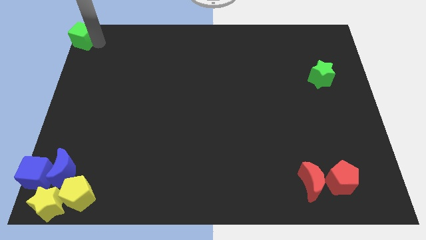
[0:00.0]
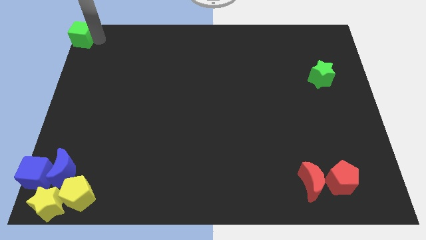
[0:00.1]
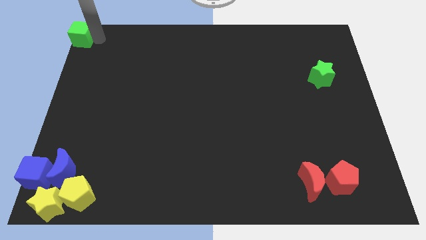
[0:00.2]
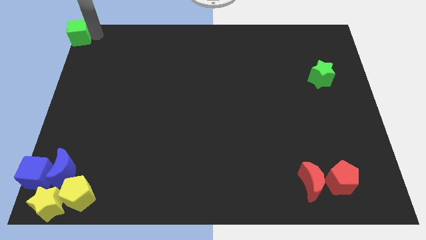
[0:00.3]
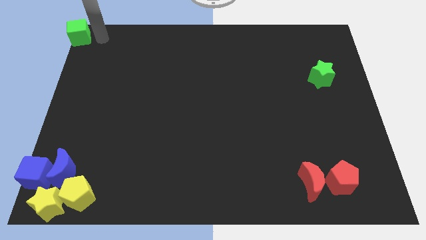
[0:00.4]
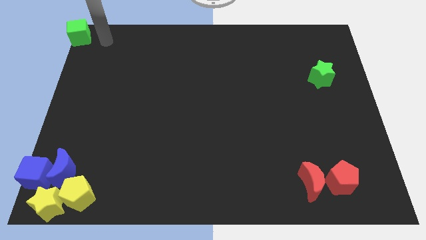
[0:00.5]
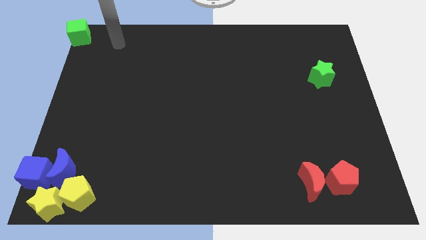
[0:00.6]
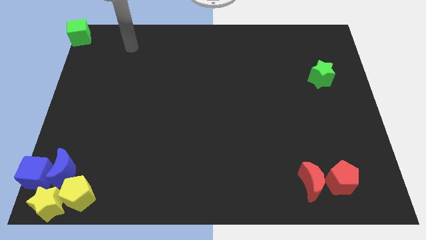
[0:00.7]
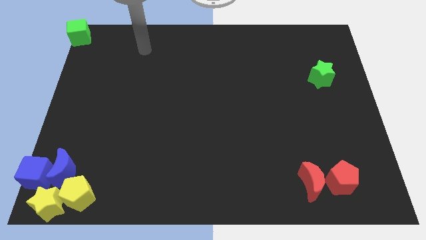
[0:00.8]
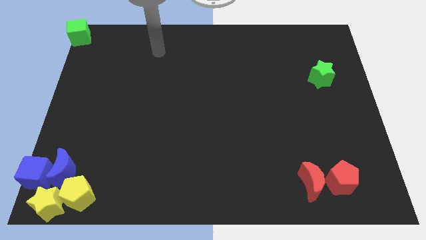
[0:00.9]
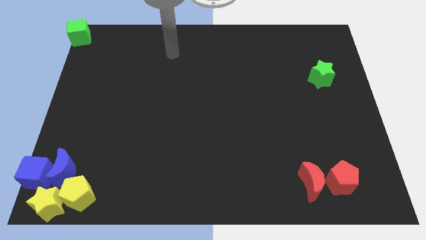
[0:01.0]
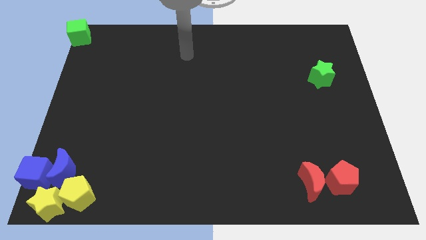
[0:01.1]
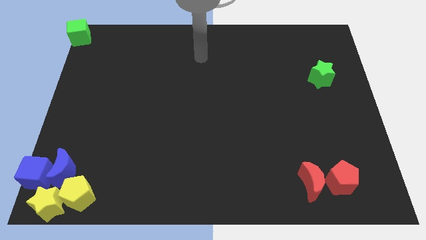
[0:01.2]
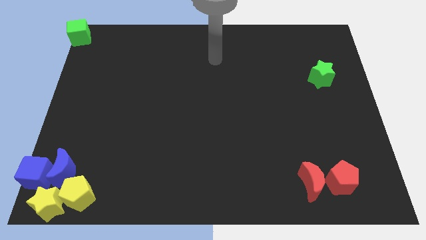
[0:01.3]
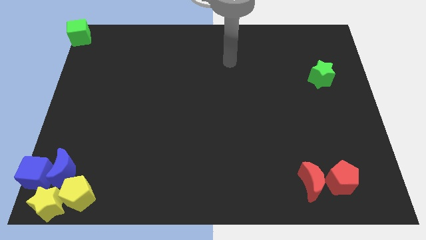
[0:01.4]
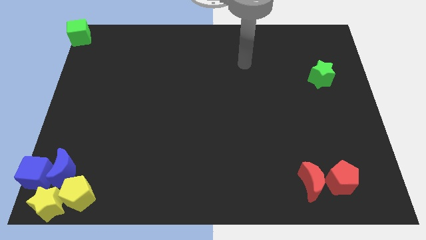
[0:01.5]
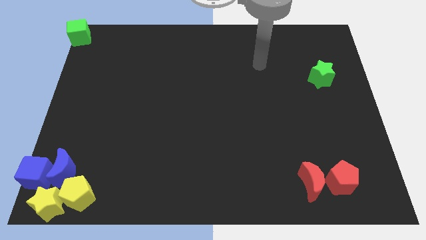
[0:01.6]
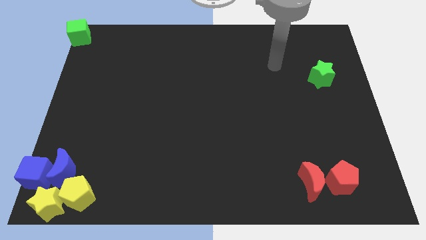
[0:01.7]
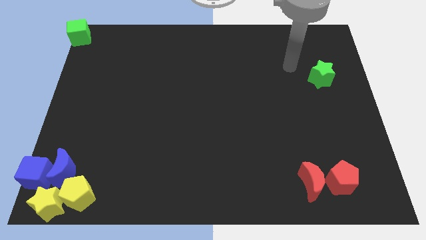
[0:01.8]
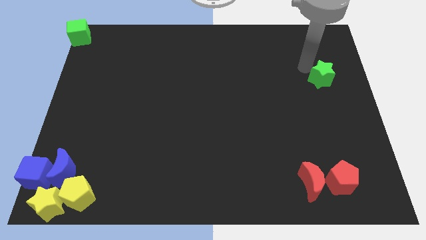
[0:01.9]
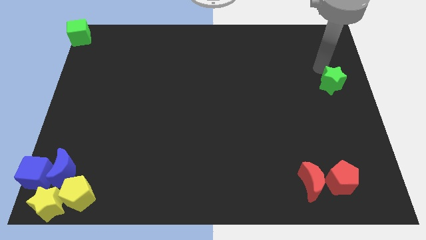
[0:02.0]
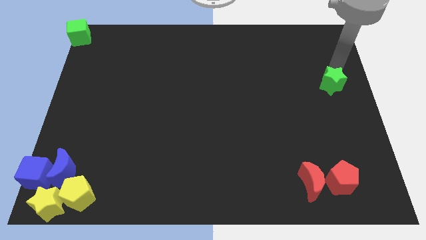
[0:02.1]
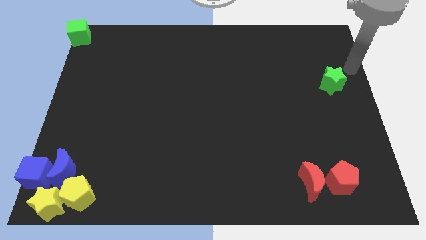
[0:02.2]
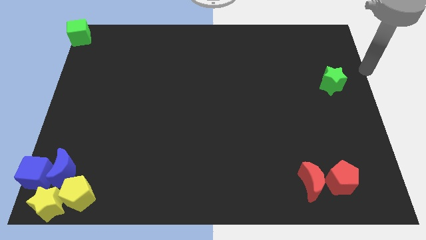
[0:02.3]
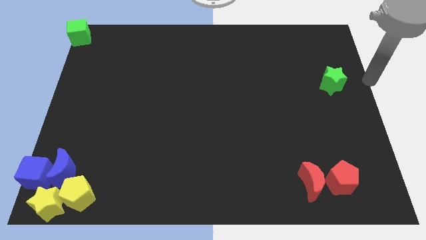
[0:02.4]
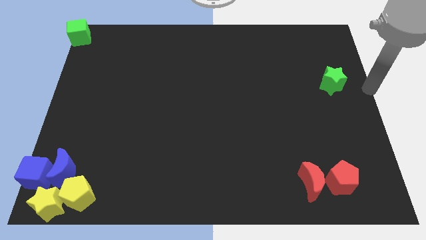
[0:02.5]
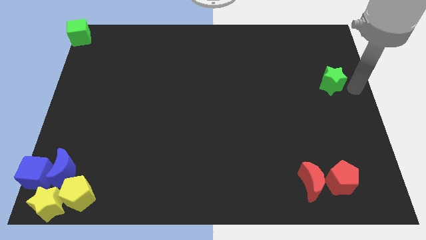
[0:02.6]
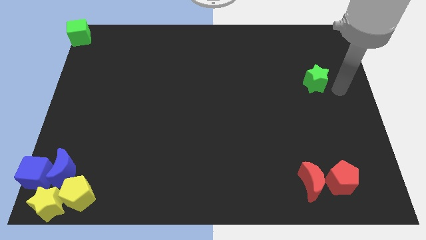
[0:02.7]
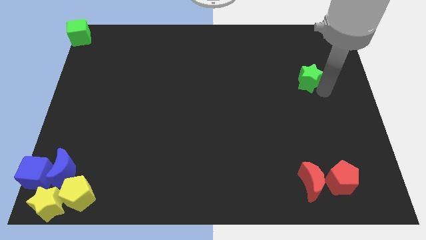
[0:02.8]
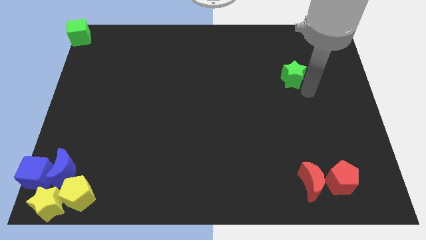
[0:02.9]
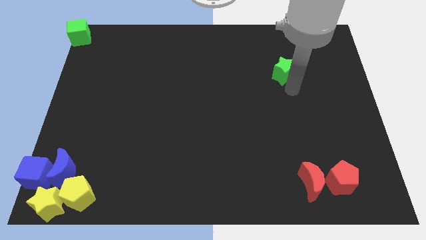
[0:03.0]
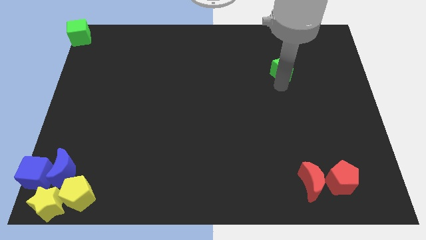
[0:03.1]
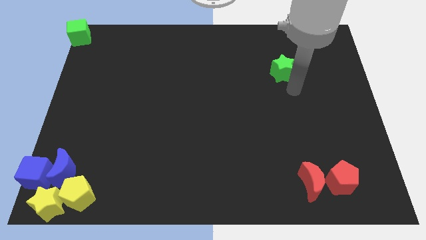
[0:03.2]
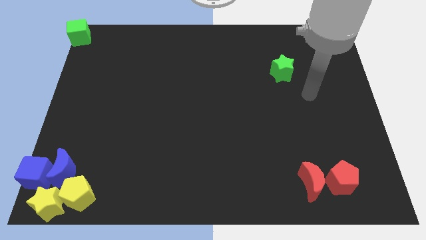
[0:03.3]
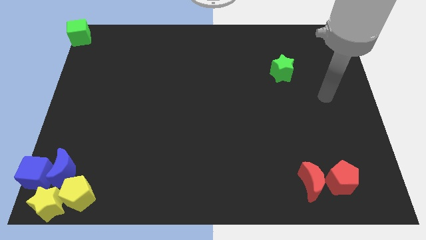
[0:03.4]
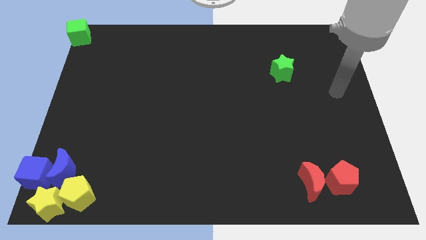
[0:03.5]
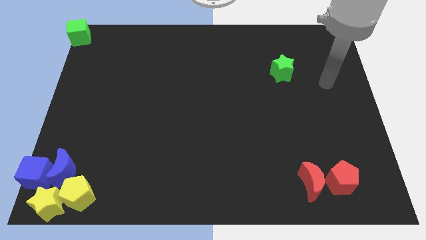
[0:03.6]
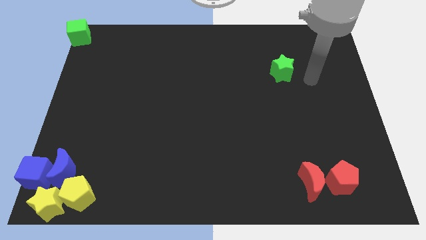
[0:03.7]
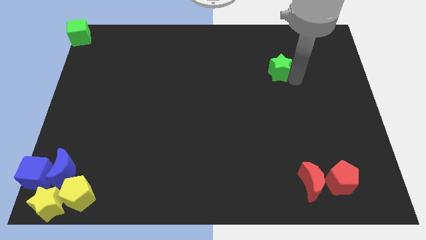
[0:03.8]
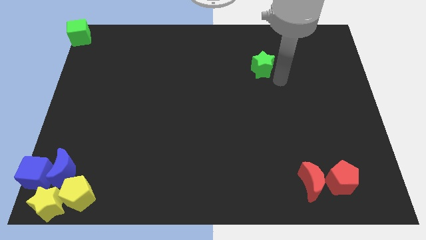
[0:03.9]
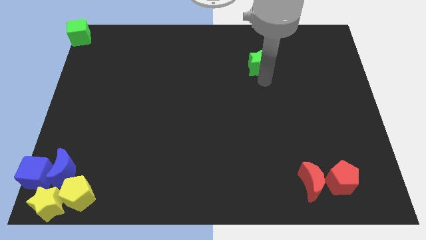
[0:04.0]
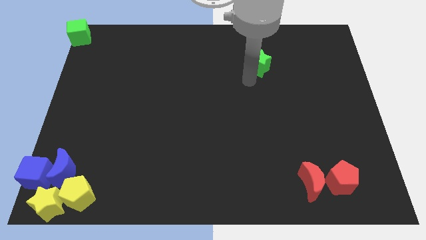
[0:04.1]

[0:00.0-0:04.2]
move the green star to the top side of the table

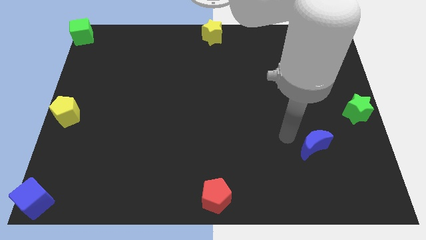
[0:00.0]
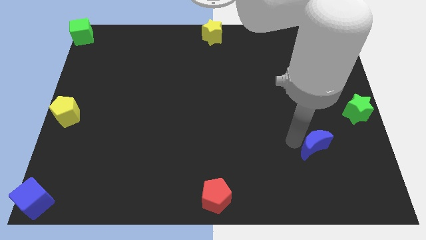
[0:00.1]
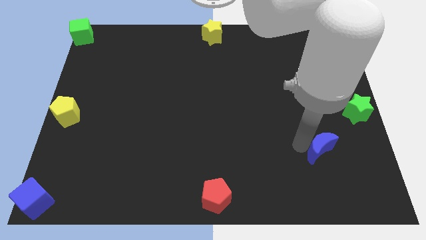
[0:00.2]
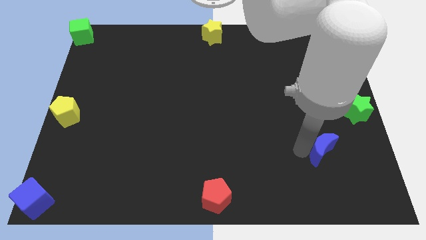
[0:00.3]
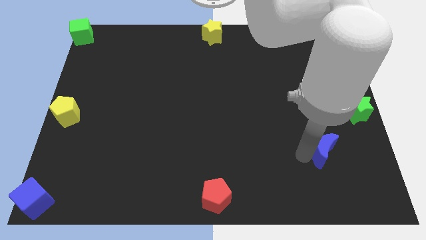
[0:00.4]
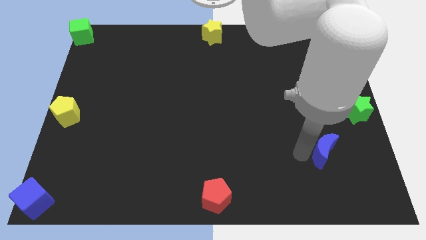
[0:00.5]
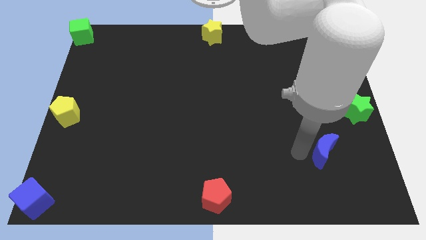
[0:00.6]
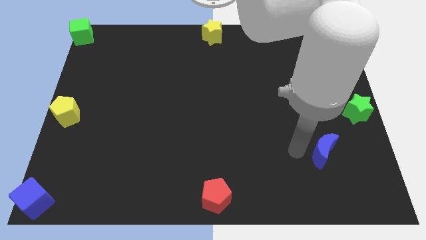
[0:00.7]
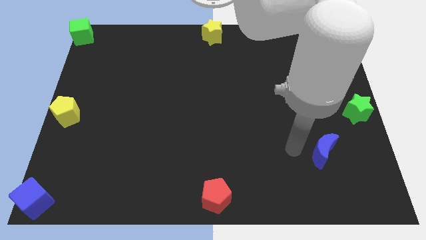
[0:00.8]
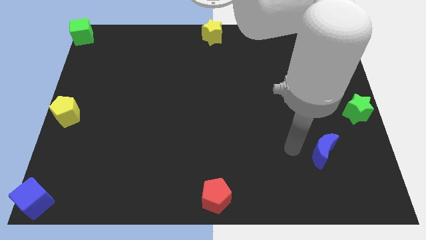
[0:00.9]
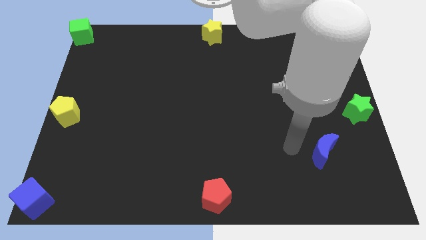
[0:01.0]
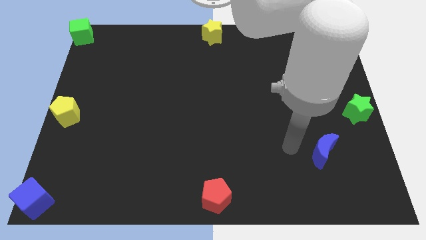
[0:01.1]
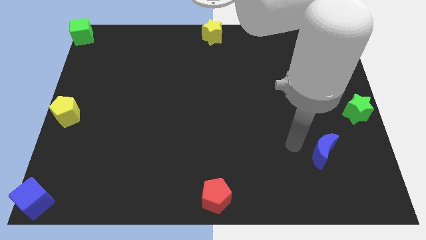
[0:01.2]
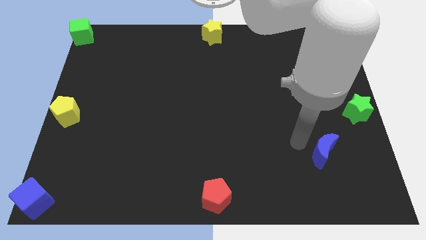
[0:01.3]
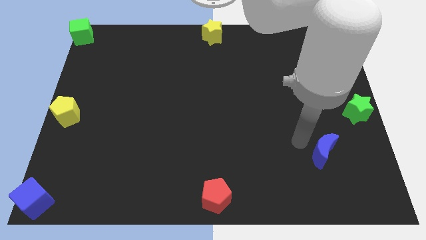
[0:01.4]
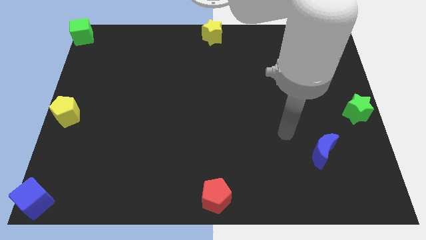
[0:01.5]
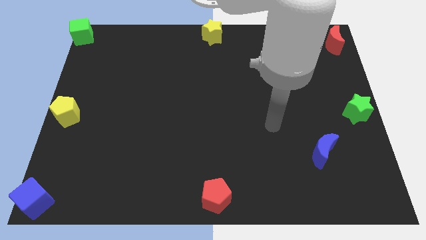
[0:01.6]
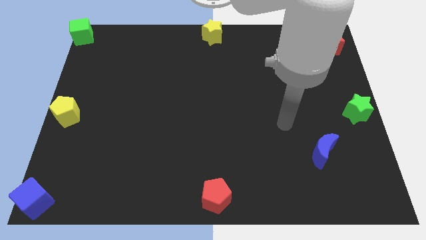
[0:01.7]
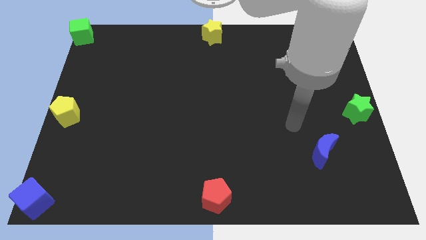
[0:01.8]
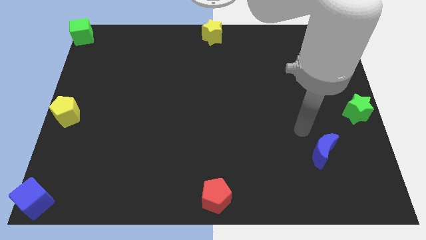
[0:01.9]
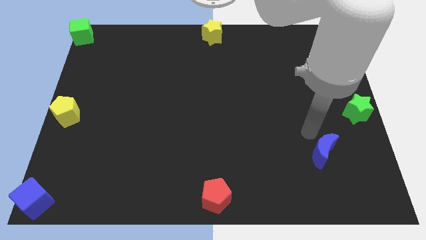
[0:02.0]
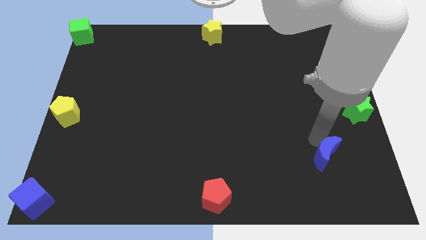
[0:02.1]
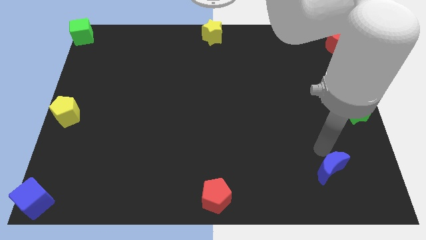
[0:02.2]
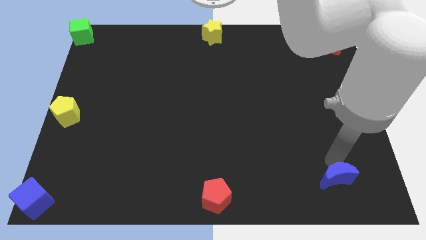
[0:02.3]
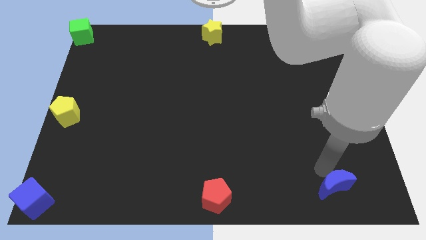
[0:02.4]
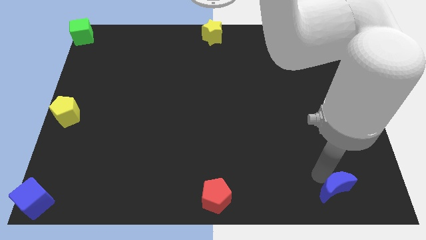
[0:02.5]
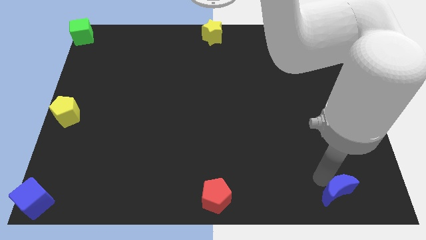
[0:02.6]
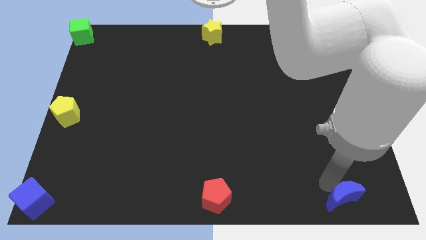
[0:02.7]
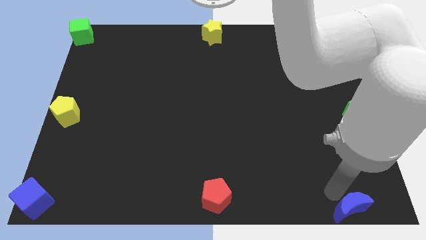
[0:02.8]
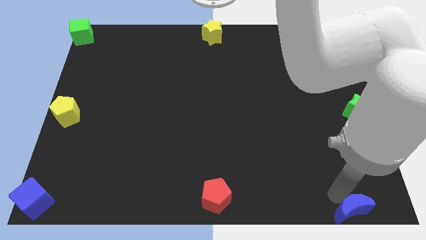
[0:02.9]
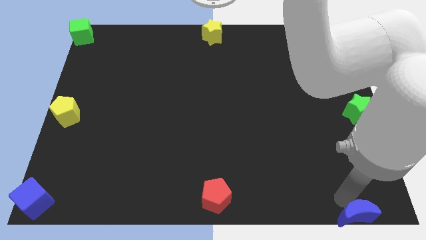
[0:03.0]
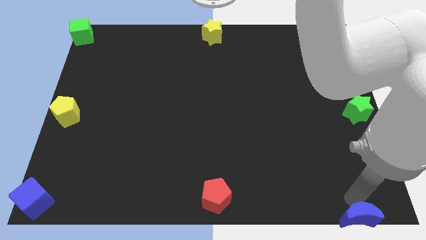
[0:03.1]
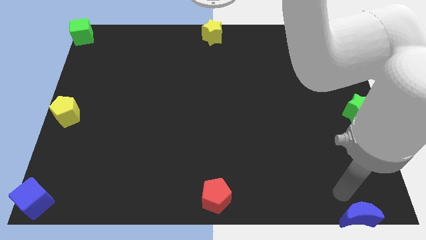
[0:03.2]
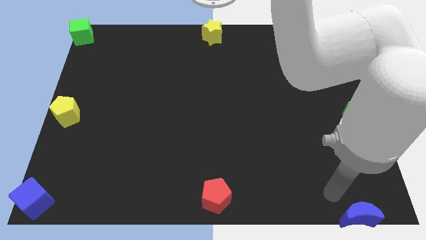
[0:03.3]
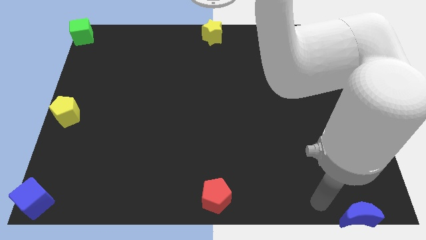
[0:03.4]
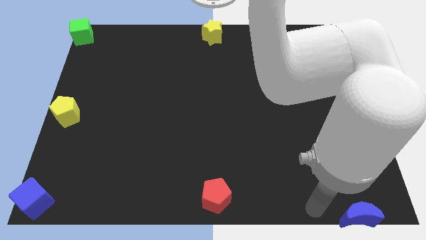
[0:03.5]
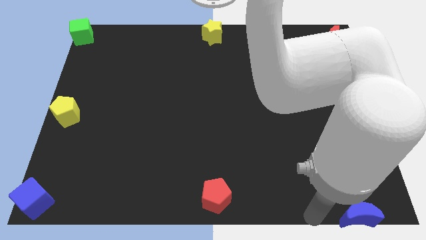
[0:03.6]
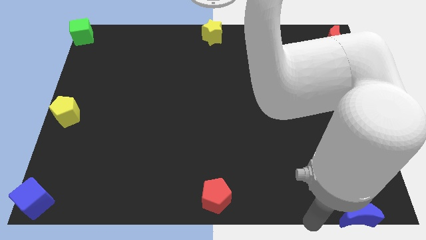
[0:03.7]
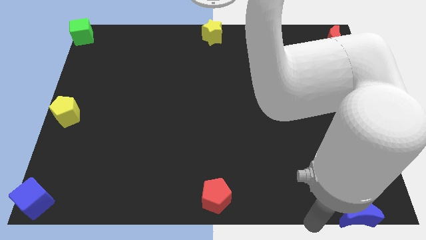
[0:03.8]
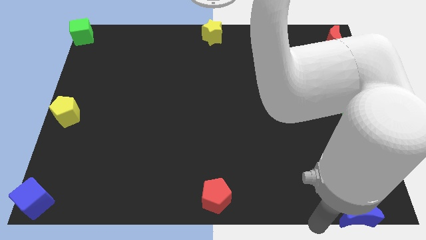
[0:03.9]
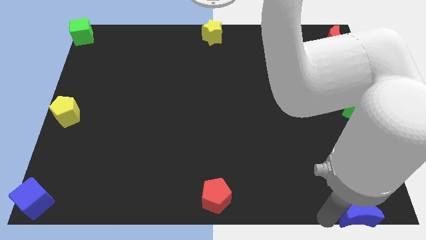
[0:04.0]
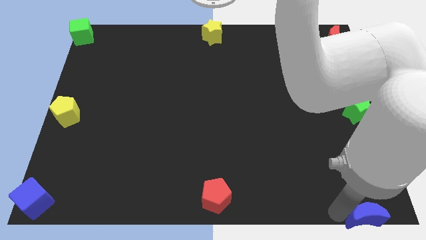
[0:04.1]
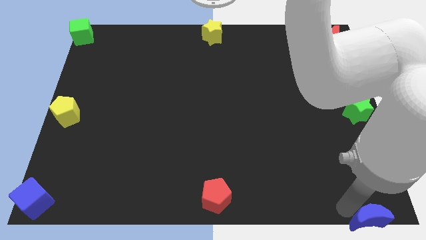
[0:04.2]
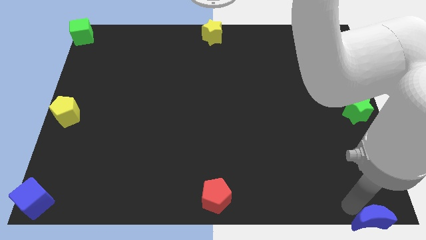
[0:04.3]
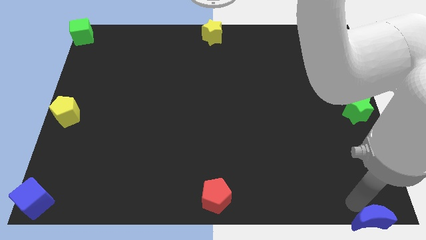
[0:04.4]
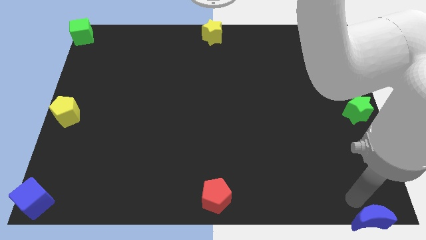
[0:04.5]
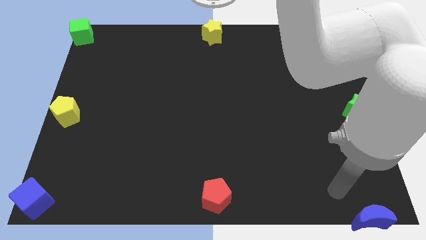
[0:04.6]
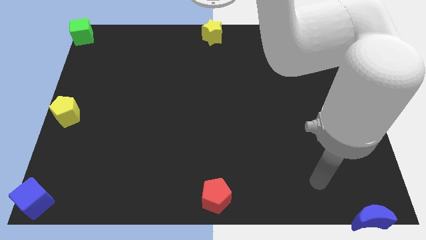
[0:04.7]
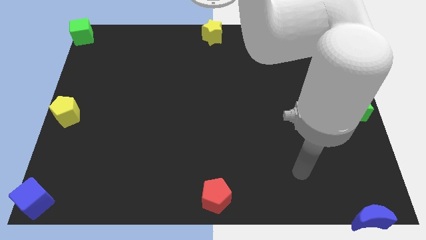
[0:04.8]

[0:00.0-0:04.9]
place the blue crescent to the bottom right corner of the board
